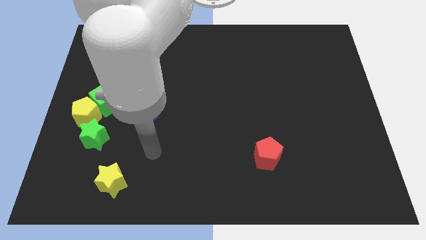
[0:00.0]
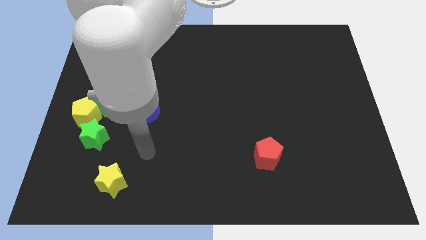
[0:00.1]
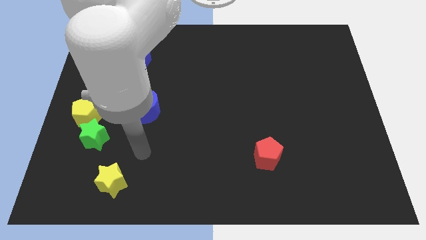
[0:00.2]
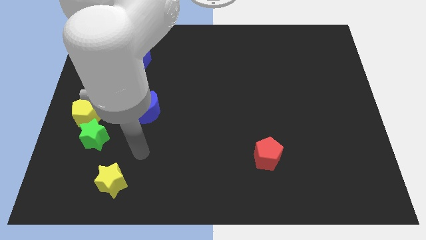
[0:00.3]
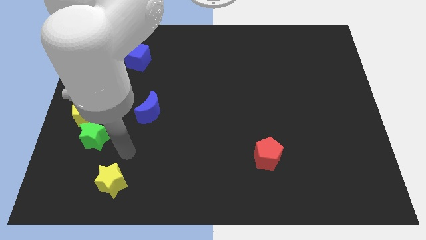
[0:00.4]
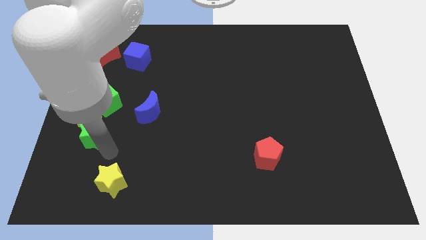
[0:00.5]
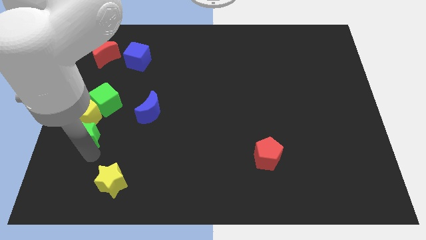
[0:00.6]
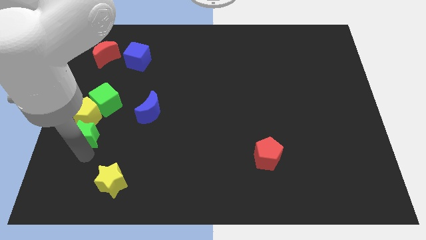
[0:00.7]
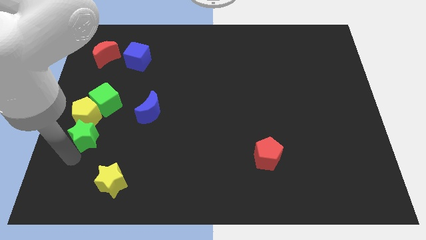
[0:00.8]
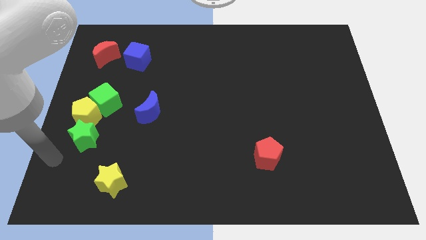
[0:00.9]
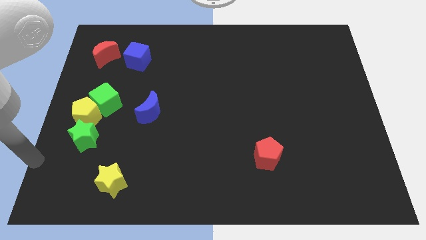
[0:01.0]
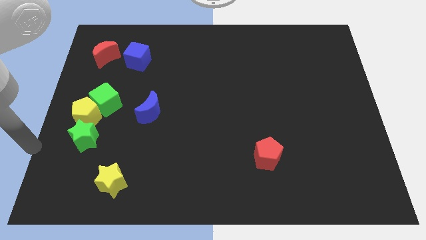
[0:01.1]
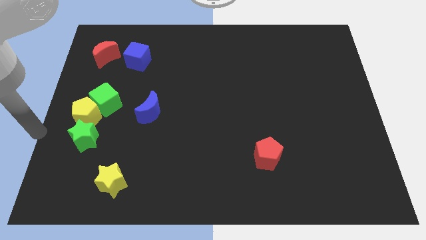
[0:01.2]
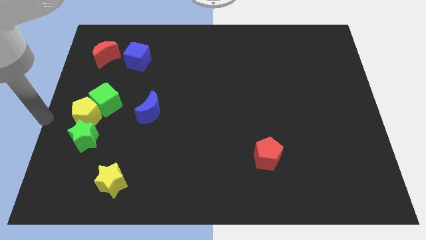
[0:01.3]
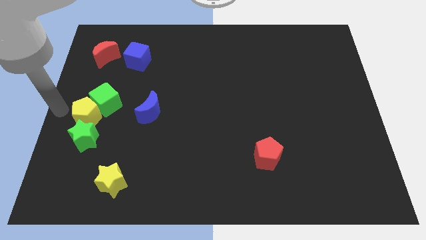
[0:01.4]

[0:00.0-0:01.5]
move your arm towards the left of yellow pentagon

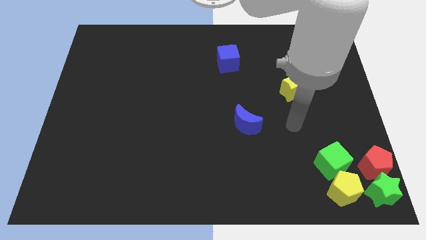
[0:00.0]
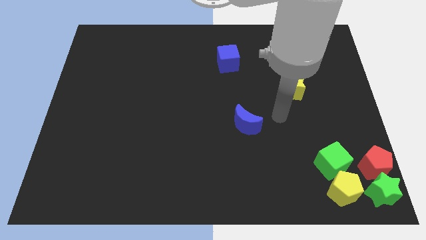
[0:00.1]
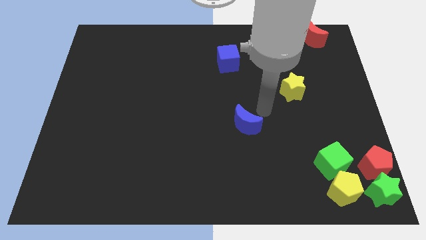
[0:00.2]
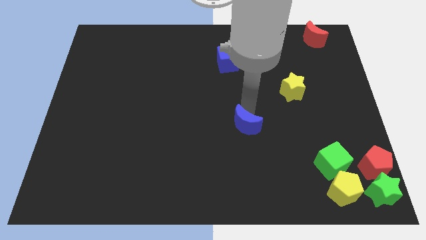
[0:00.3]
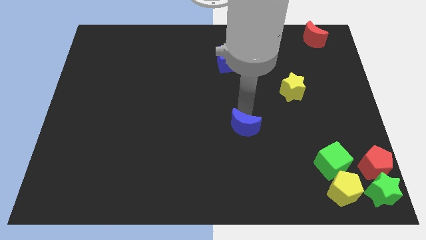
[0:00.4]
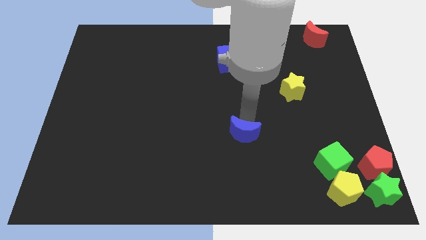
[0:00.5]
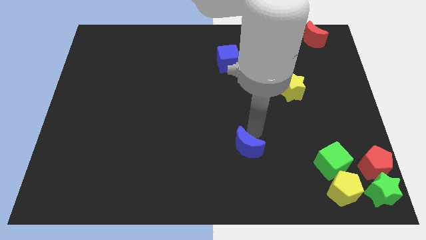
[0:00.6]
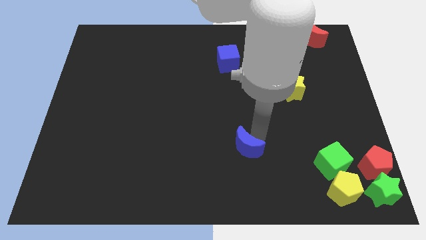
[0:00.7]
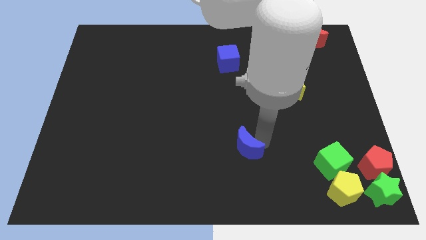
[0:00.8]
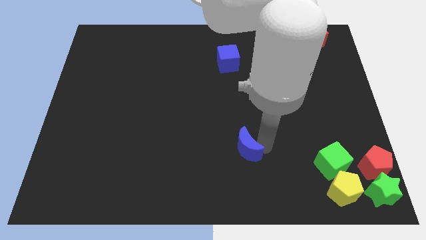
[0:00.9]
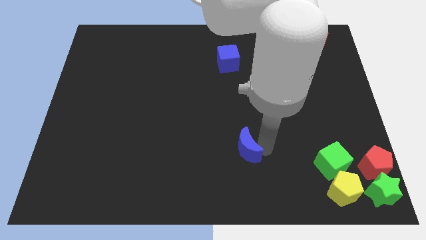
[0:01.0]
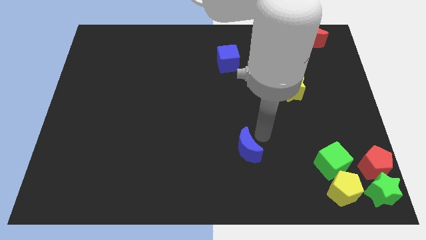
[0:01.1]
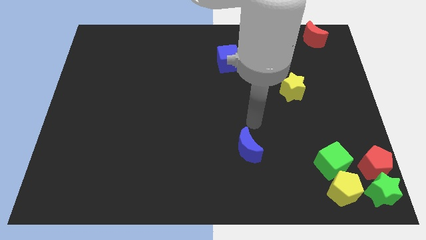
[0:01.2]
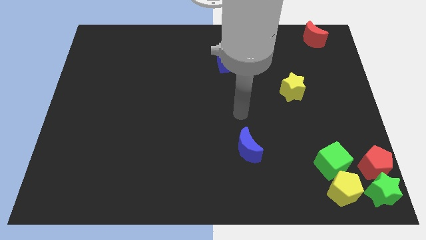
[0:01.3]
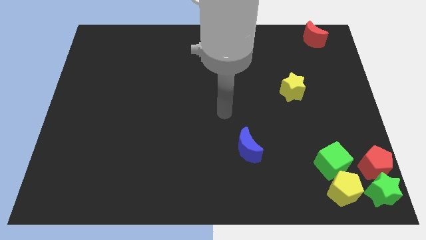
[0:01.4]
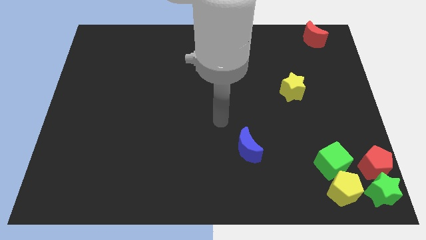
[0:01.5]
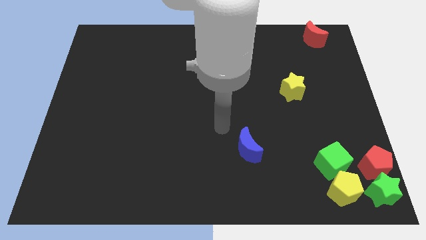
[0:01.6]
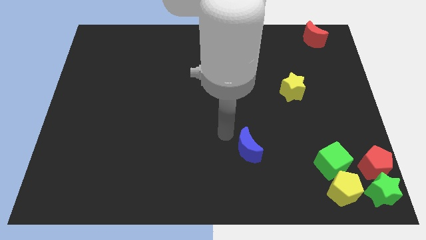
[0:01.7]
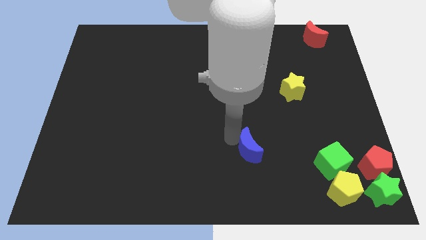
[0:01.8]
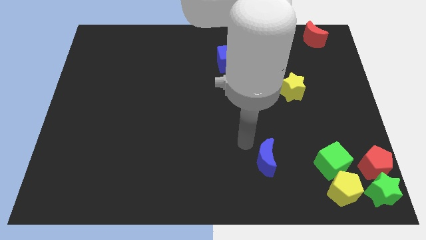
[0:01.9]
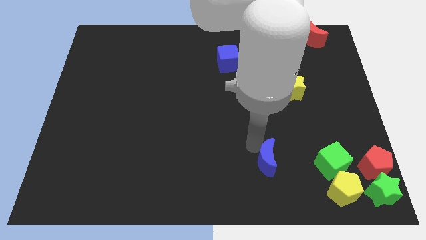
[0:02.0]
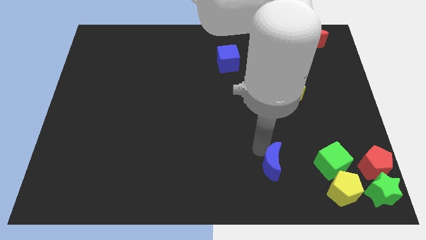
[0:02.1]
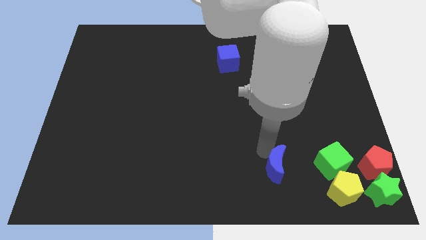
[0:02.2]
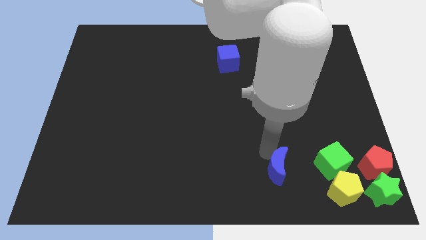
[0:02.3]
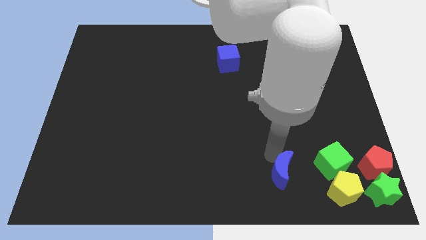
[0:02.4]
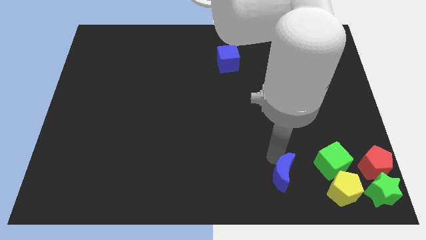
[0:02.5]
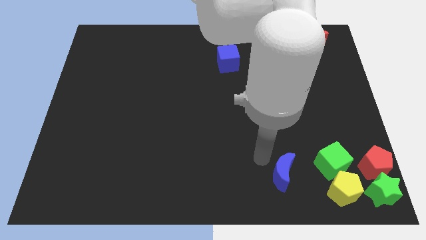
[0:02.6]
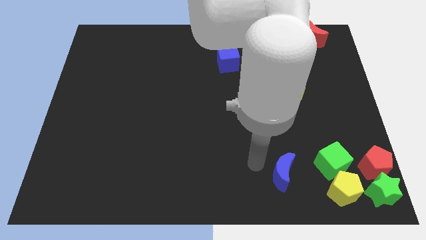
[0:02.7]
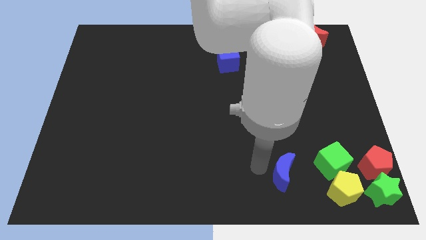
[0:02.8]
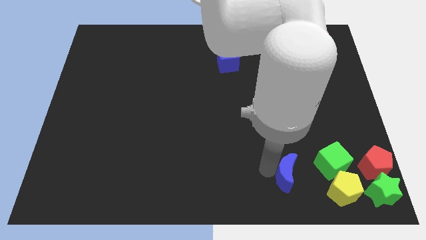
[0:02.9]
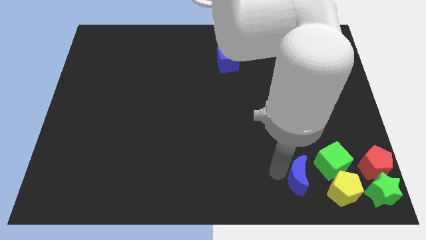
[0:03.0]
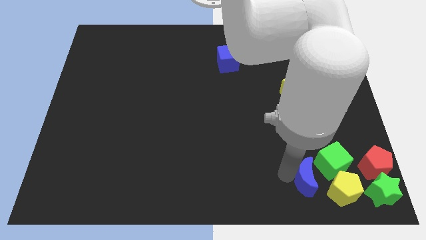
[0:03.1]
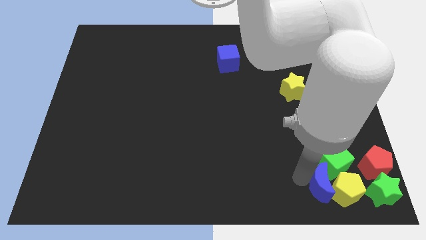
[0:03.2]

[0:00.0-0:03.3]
move the blue crescent into the group of blocks

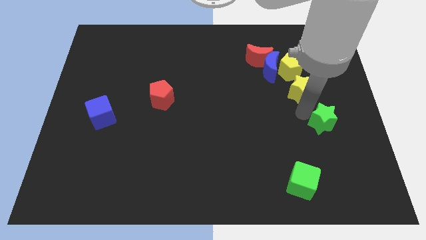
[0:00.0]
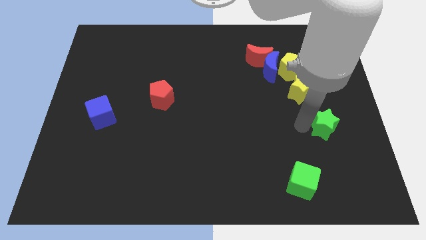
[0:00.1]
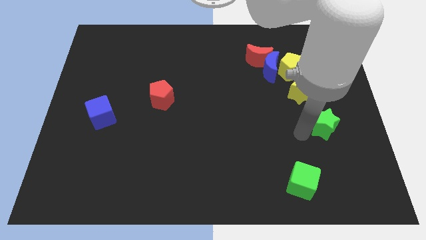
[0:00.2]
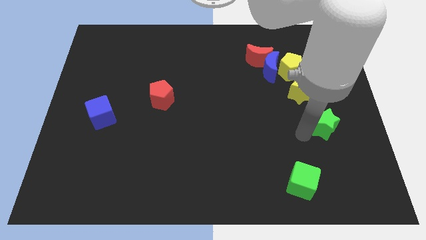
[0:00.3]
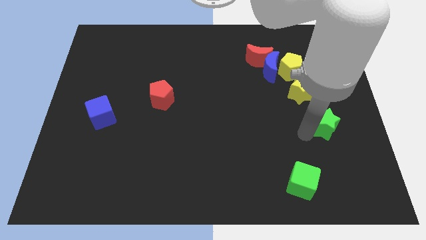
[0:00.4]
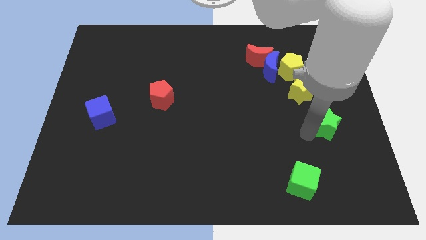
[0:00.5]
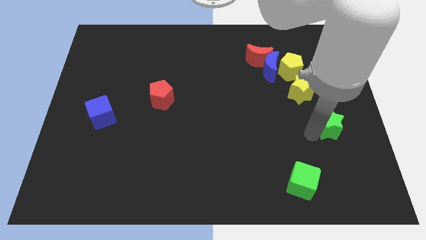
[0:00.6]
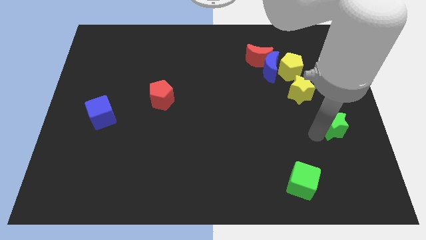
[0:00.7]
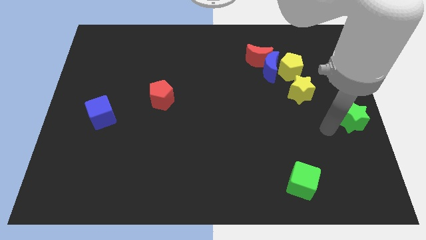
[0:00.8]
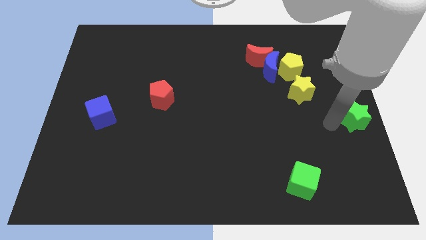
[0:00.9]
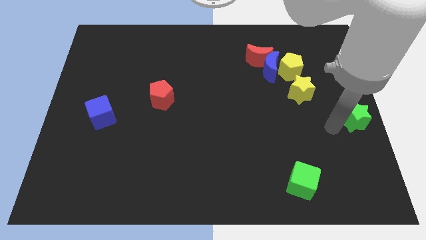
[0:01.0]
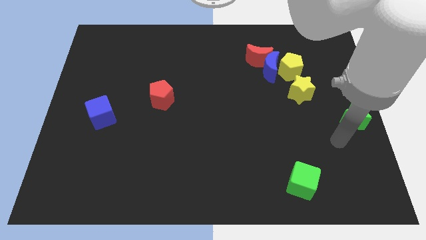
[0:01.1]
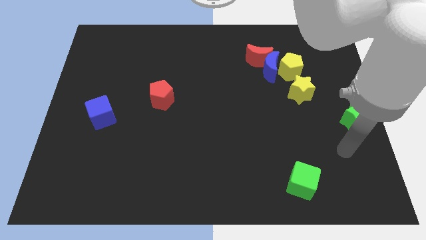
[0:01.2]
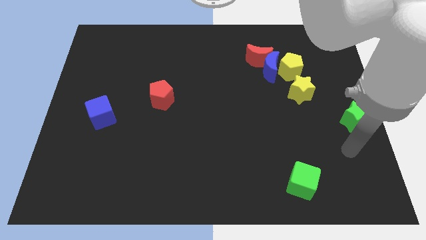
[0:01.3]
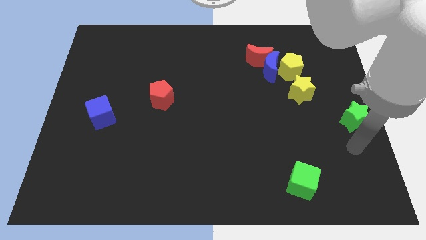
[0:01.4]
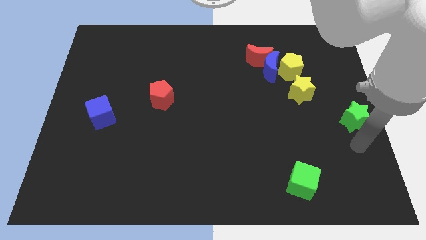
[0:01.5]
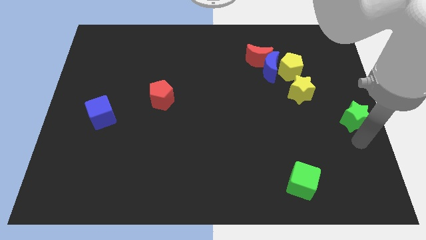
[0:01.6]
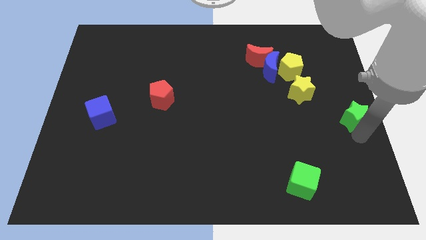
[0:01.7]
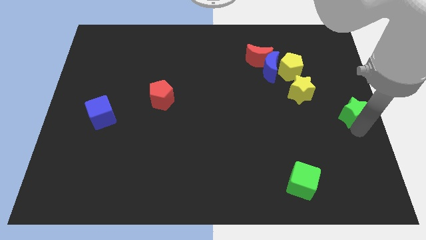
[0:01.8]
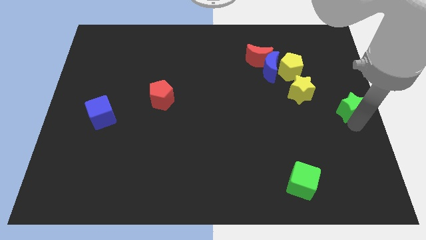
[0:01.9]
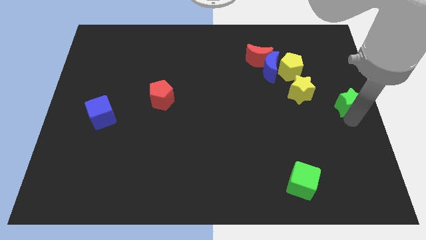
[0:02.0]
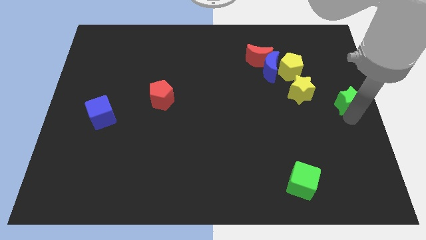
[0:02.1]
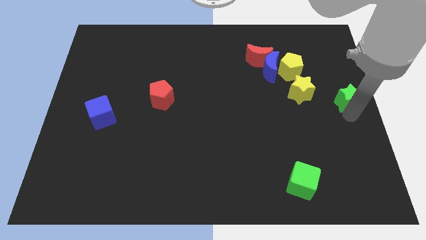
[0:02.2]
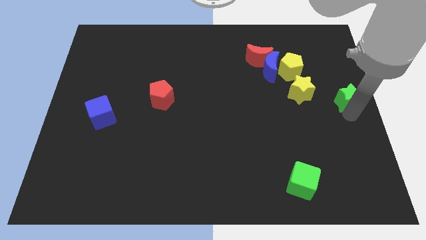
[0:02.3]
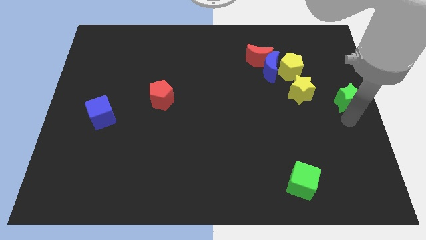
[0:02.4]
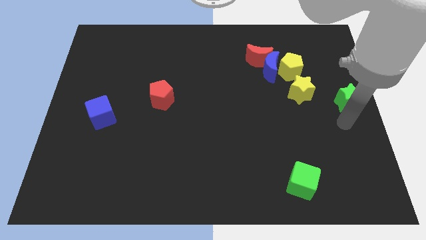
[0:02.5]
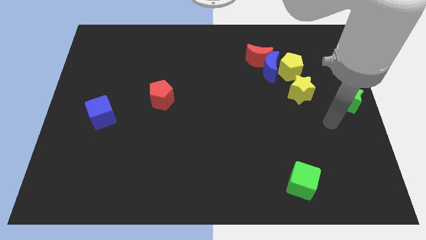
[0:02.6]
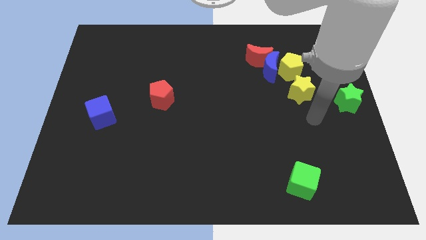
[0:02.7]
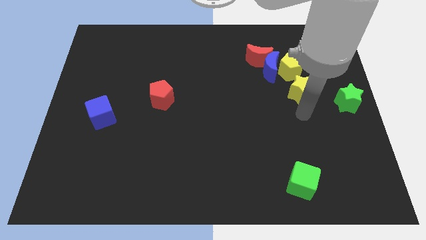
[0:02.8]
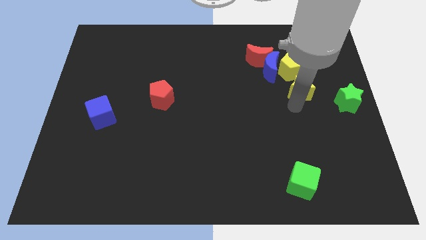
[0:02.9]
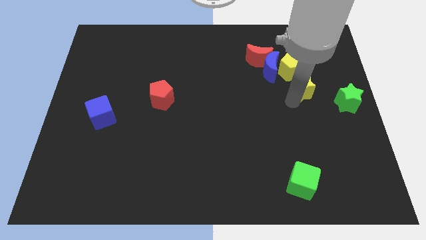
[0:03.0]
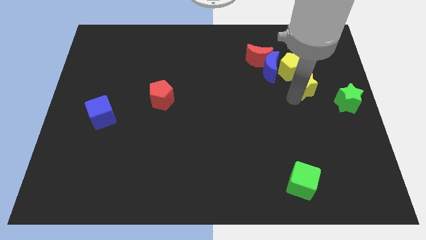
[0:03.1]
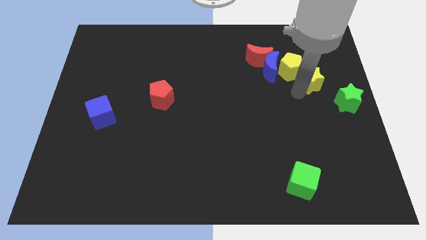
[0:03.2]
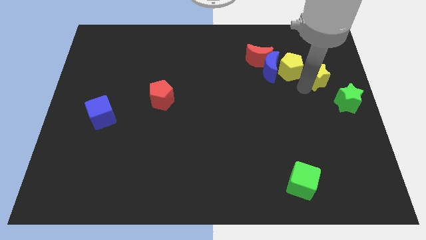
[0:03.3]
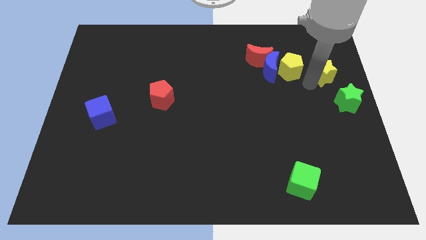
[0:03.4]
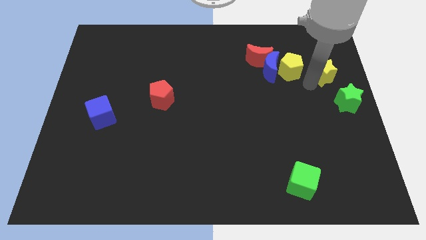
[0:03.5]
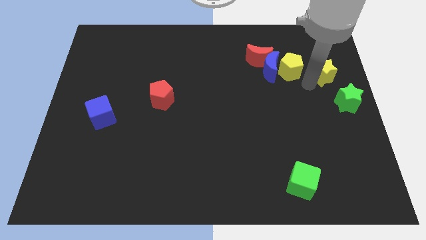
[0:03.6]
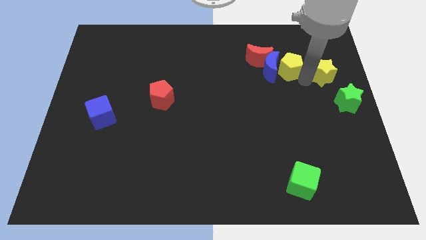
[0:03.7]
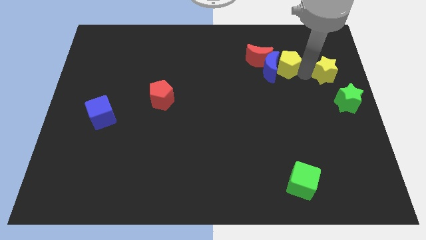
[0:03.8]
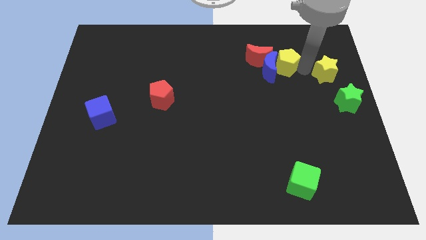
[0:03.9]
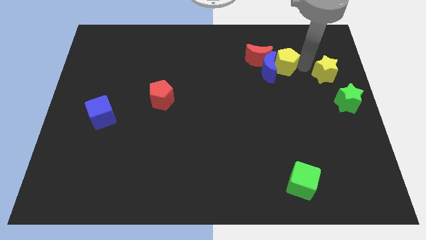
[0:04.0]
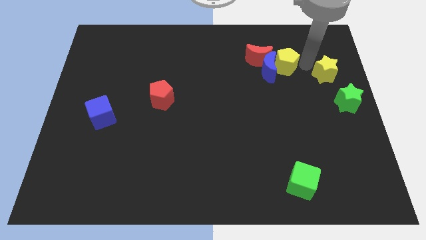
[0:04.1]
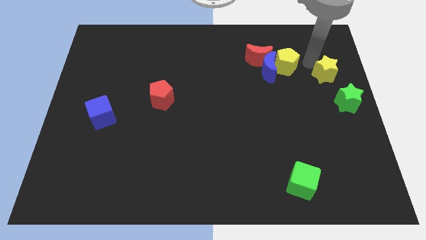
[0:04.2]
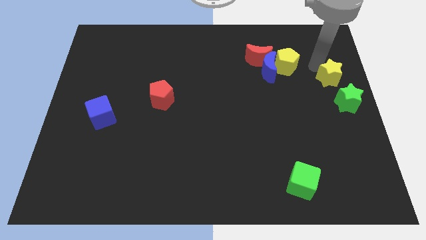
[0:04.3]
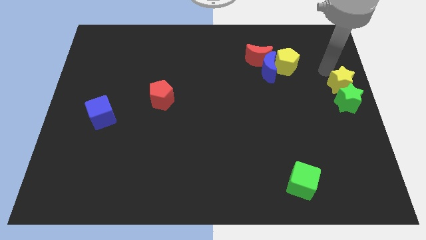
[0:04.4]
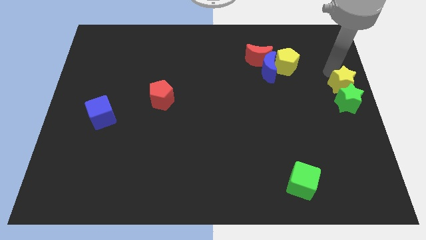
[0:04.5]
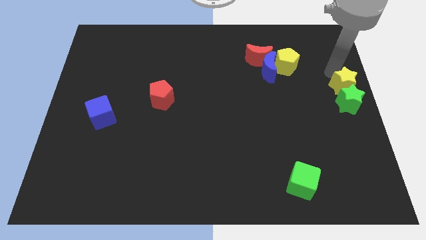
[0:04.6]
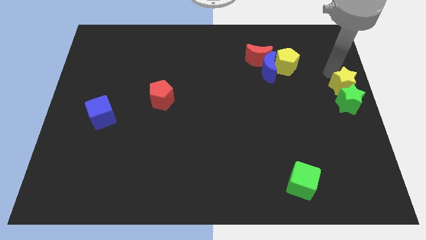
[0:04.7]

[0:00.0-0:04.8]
push the yellow star into the green star
